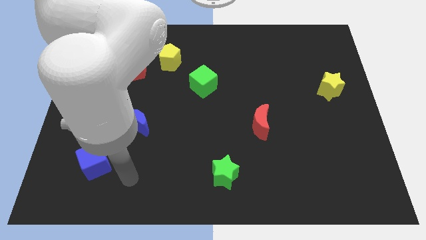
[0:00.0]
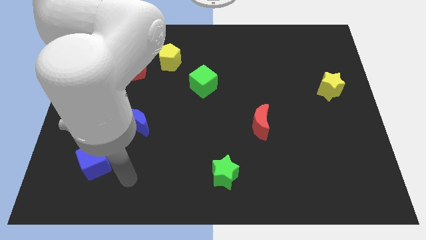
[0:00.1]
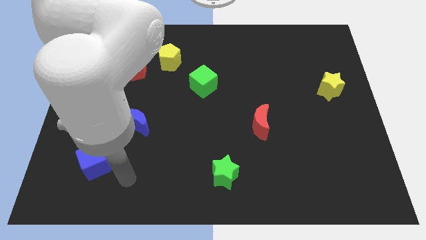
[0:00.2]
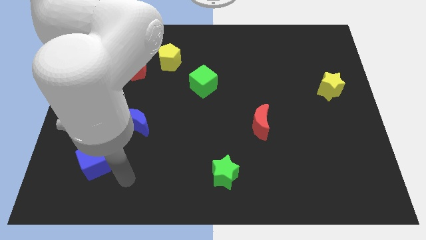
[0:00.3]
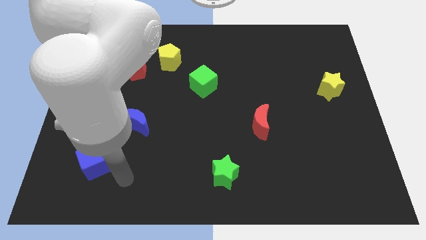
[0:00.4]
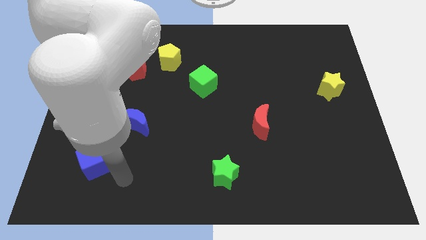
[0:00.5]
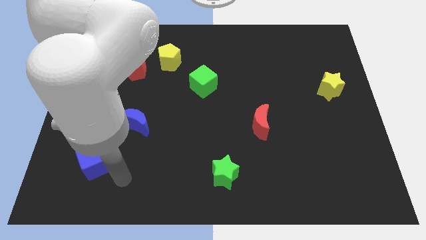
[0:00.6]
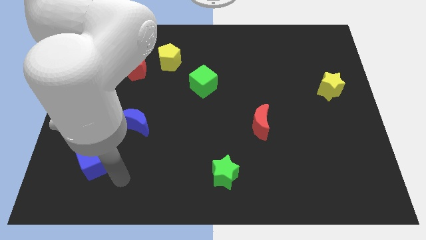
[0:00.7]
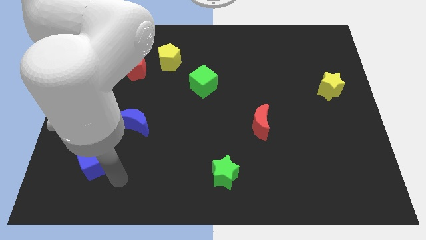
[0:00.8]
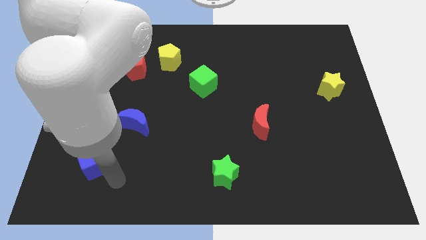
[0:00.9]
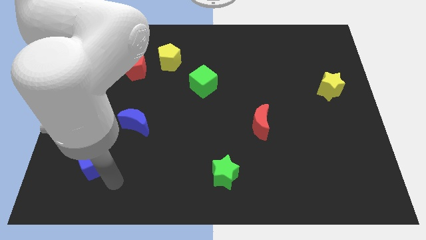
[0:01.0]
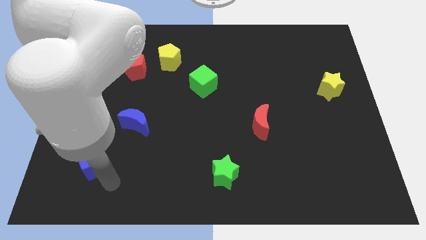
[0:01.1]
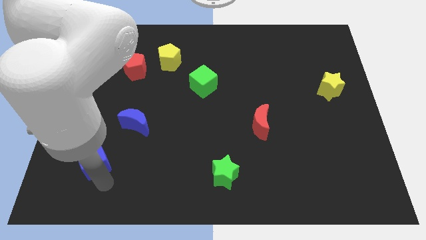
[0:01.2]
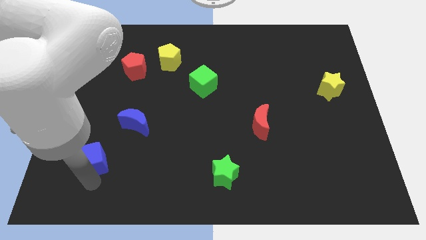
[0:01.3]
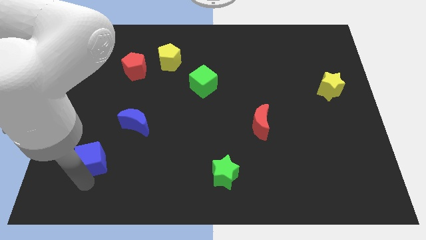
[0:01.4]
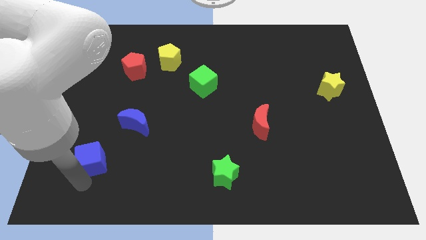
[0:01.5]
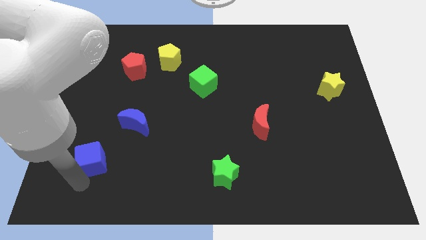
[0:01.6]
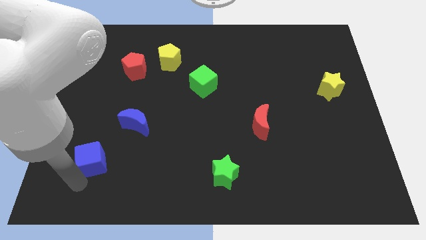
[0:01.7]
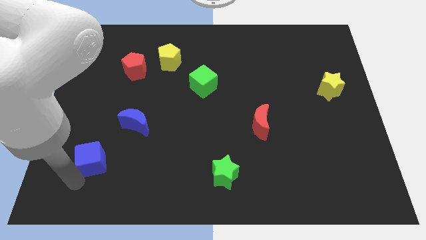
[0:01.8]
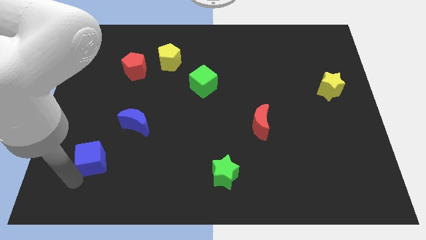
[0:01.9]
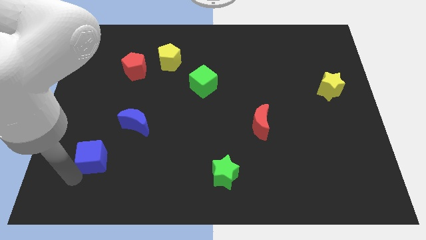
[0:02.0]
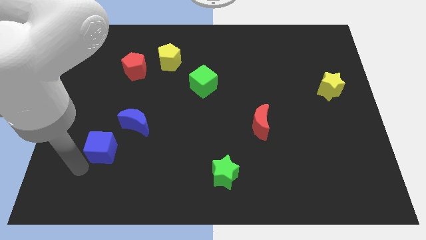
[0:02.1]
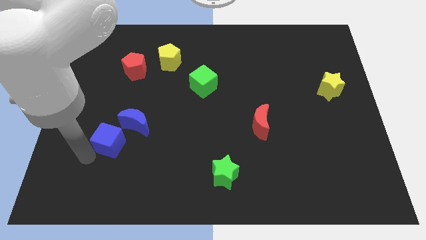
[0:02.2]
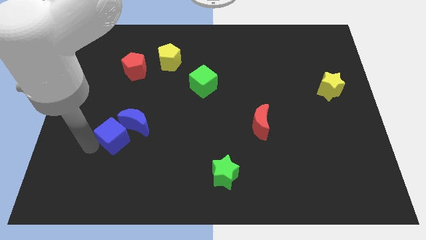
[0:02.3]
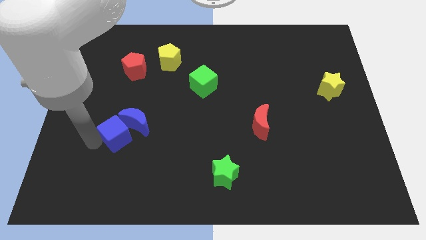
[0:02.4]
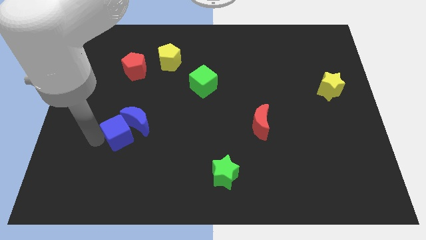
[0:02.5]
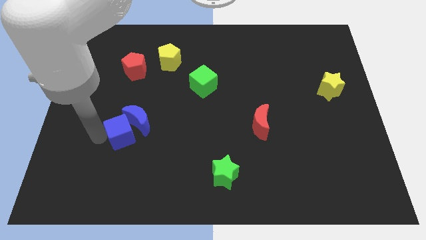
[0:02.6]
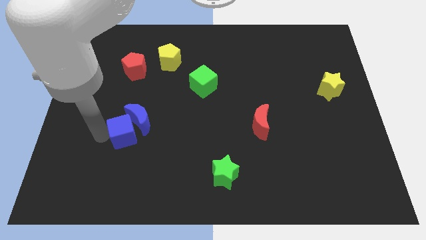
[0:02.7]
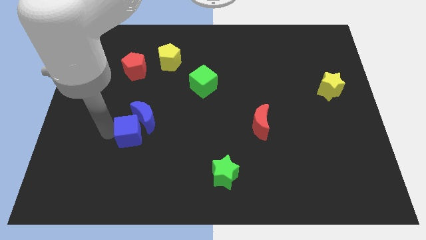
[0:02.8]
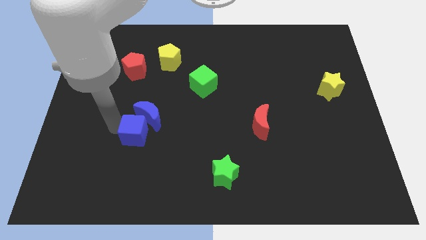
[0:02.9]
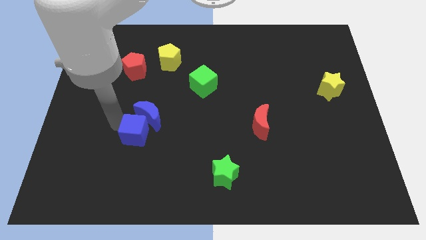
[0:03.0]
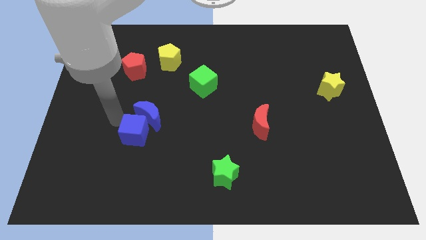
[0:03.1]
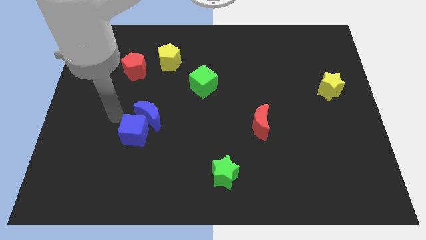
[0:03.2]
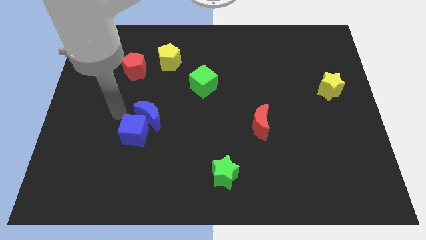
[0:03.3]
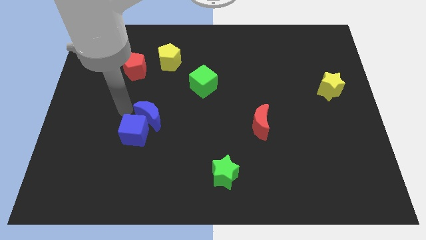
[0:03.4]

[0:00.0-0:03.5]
move the blue cube into the blue crescent

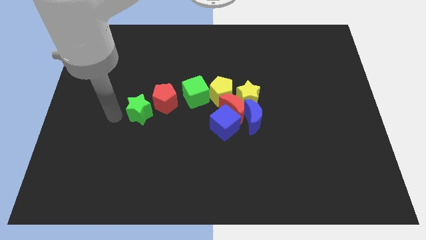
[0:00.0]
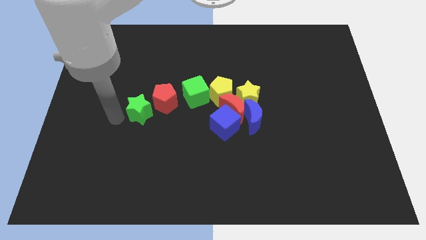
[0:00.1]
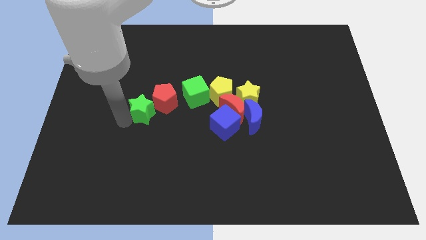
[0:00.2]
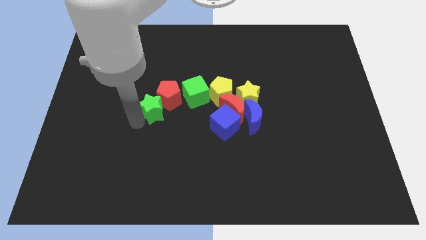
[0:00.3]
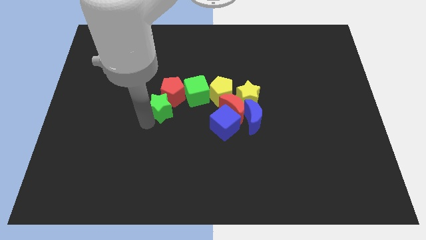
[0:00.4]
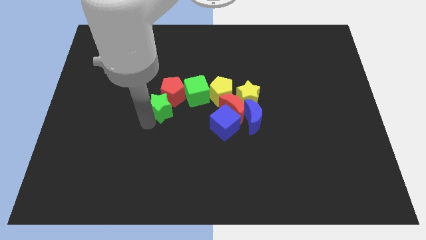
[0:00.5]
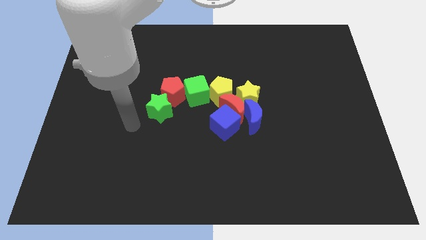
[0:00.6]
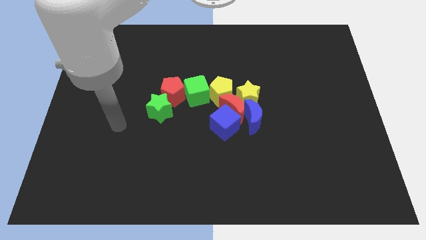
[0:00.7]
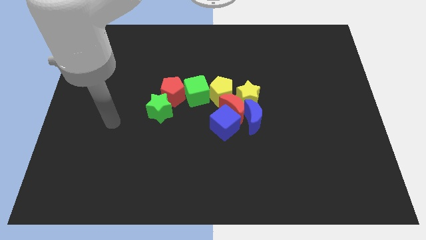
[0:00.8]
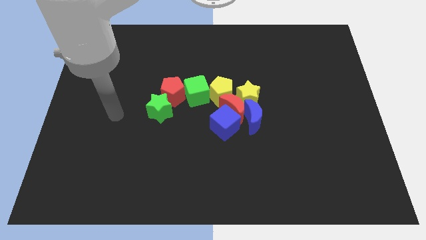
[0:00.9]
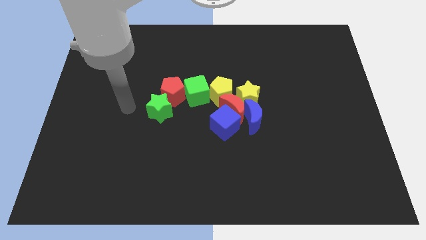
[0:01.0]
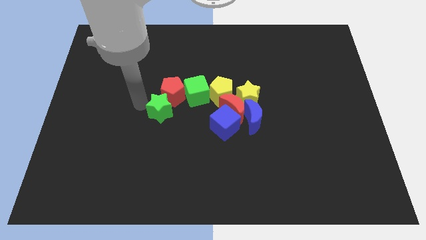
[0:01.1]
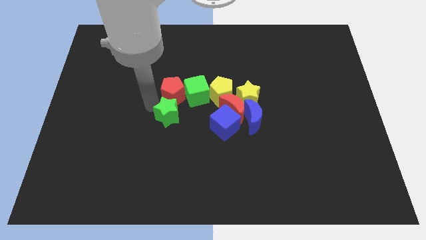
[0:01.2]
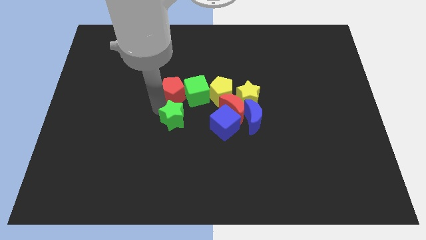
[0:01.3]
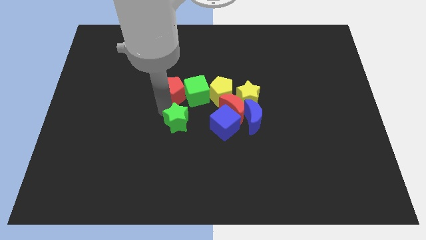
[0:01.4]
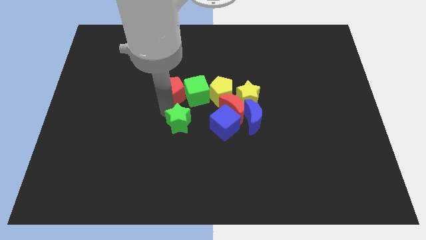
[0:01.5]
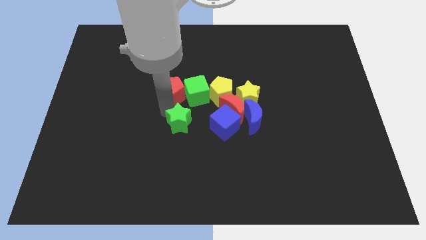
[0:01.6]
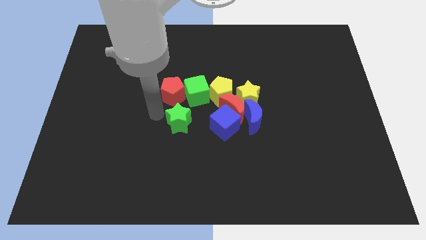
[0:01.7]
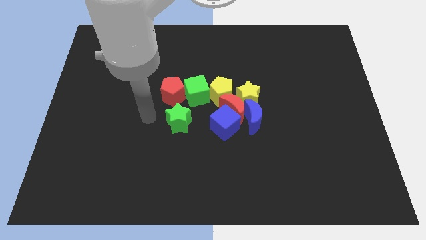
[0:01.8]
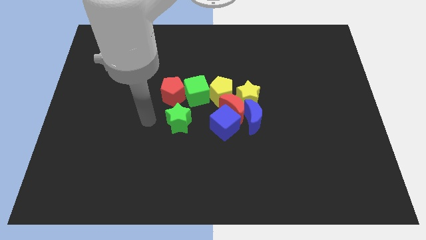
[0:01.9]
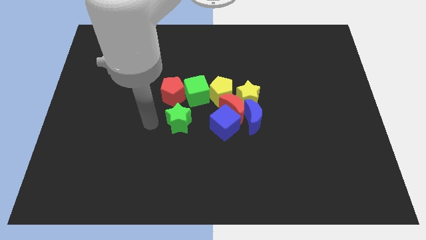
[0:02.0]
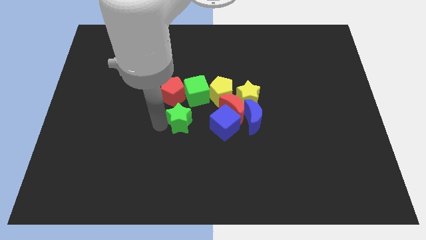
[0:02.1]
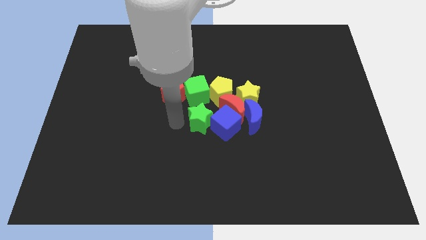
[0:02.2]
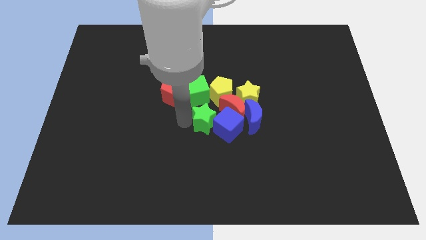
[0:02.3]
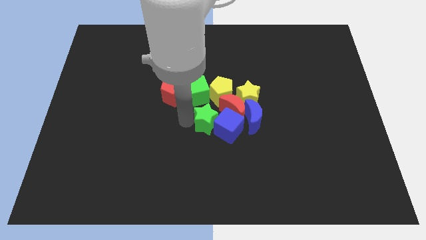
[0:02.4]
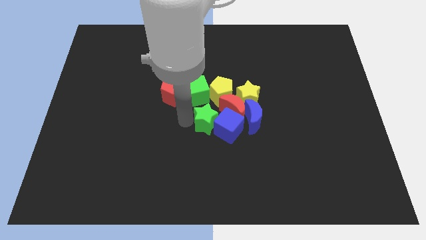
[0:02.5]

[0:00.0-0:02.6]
move the green star down to the green cube

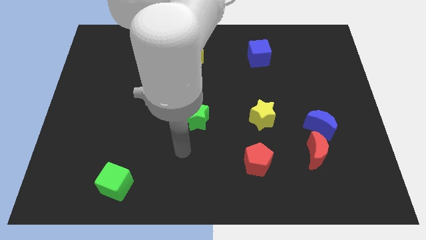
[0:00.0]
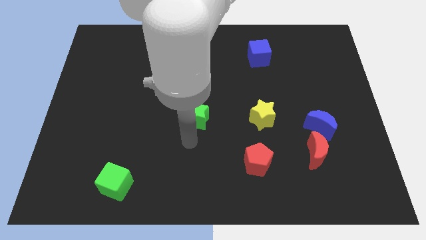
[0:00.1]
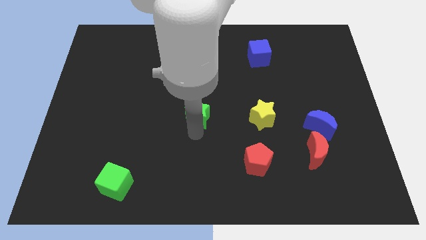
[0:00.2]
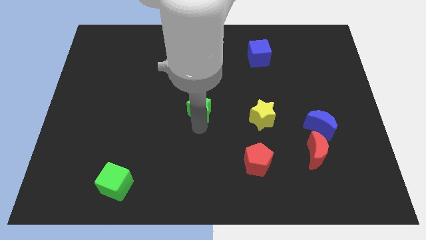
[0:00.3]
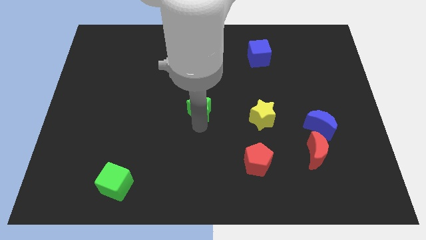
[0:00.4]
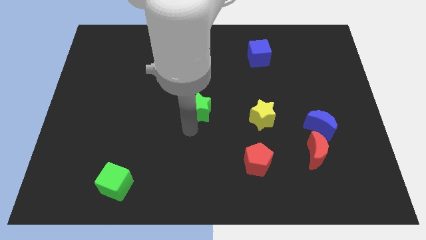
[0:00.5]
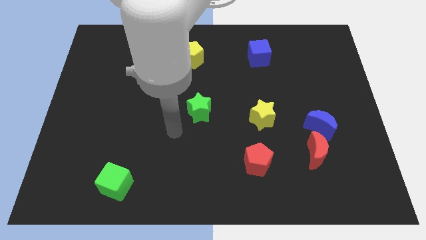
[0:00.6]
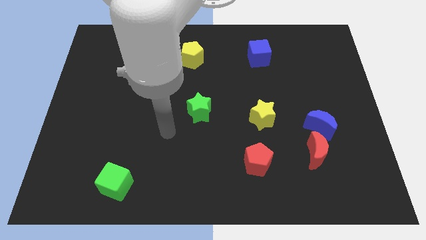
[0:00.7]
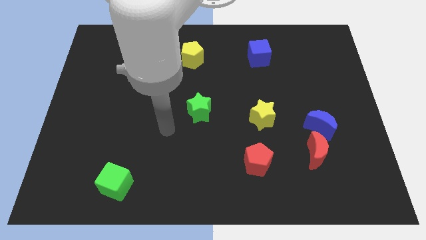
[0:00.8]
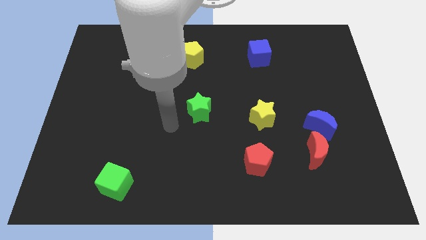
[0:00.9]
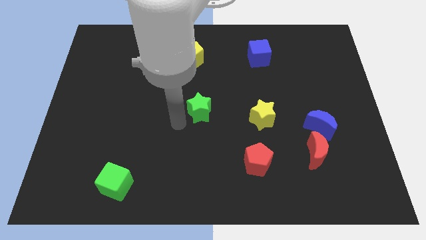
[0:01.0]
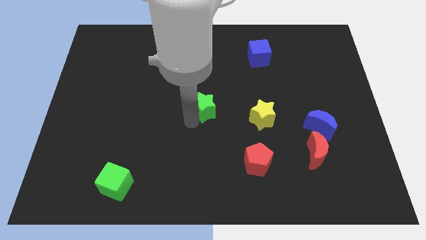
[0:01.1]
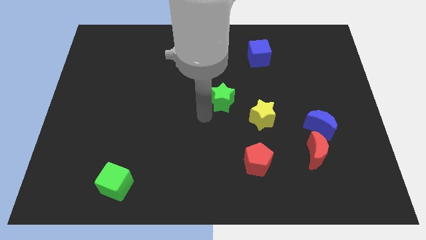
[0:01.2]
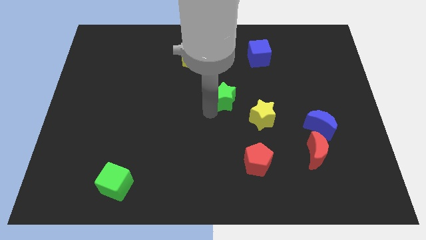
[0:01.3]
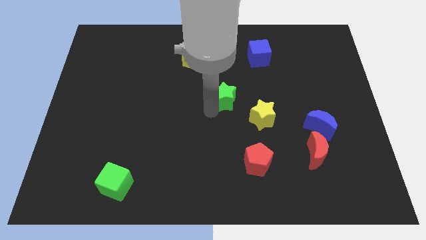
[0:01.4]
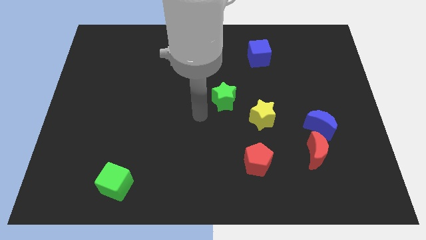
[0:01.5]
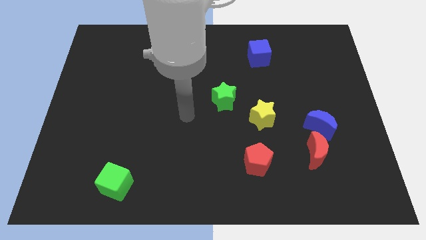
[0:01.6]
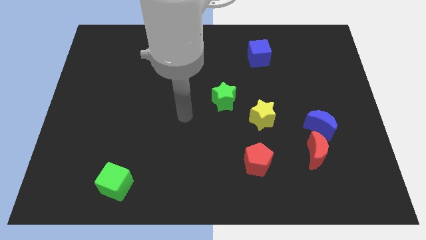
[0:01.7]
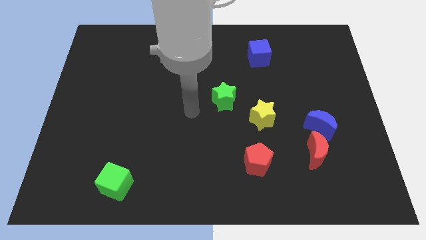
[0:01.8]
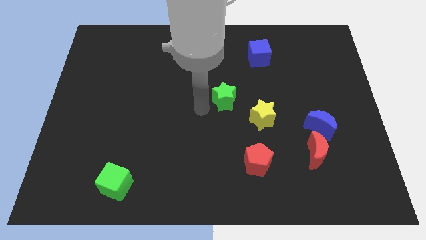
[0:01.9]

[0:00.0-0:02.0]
place the green star in between the yellow star and the yellow pentagon

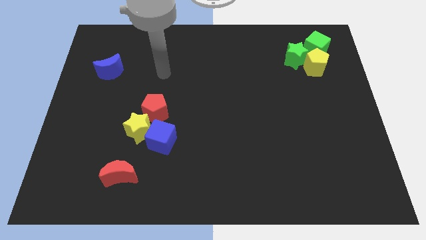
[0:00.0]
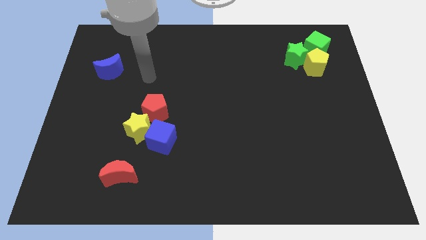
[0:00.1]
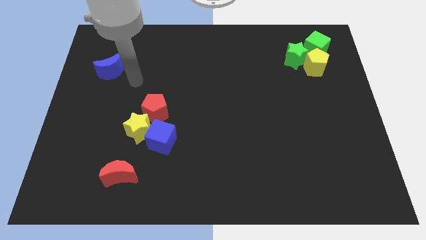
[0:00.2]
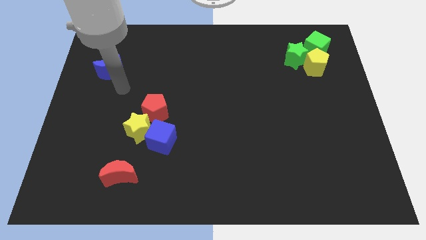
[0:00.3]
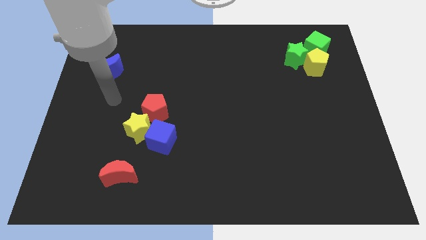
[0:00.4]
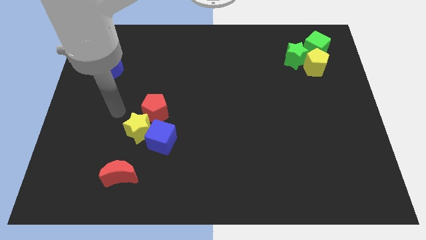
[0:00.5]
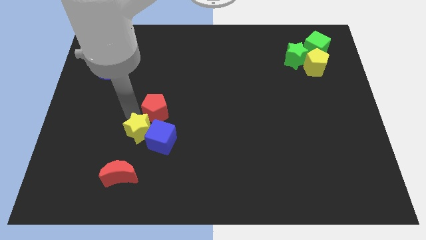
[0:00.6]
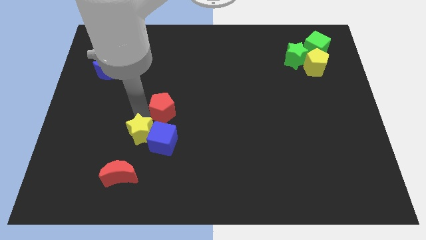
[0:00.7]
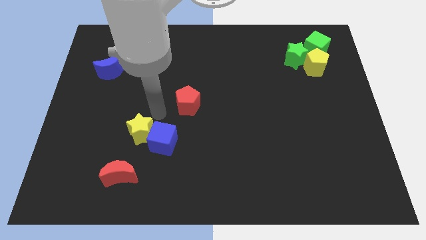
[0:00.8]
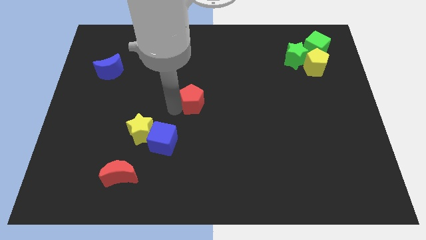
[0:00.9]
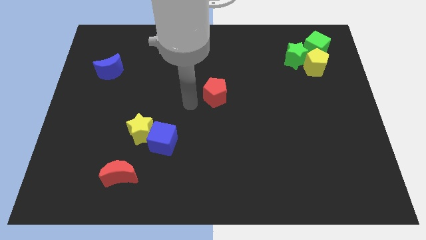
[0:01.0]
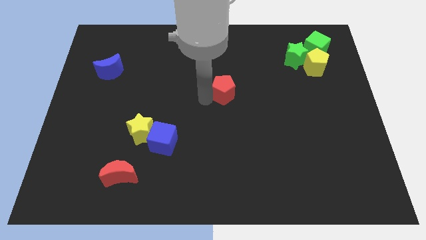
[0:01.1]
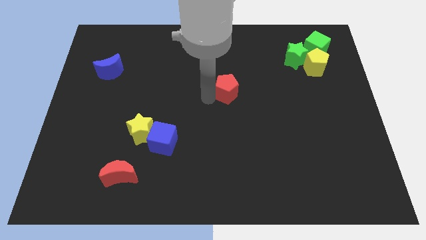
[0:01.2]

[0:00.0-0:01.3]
push the red pentagon to the center of the board
